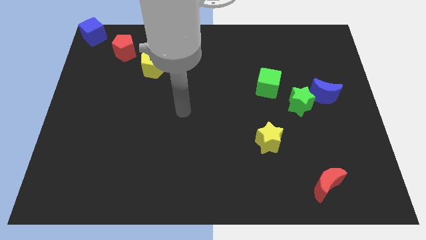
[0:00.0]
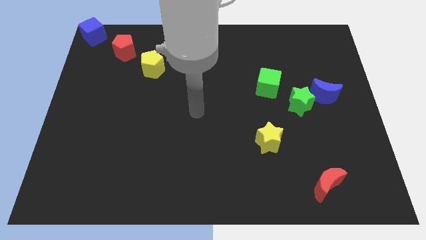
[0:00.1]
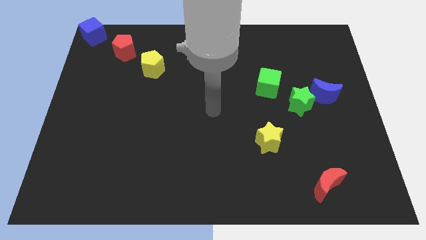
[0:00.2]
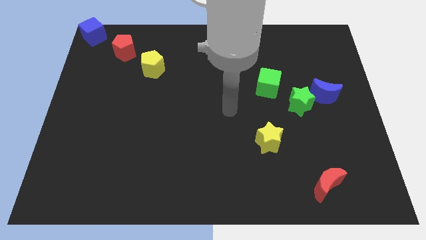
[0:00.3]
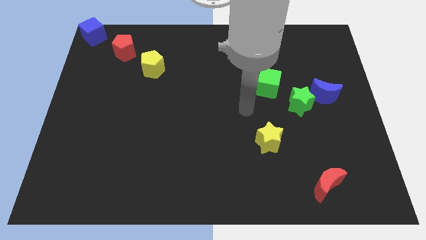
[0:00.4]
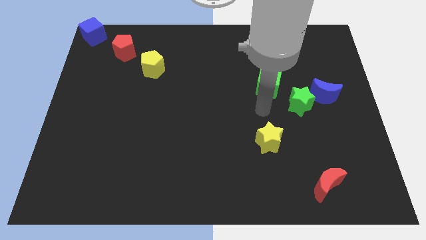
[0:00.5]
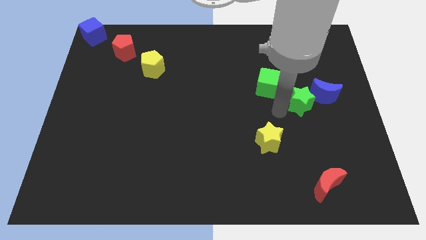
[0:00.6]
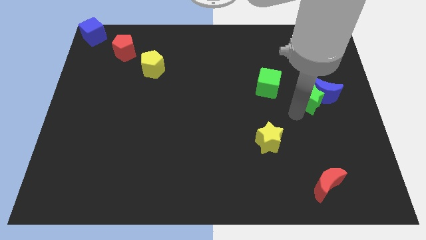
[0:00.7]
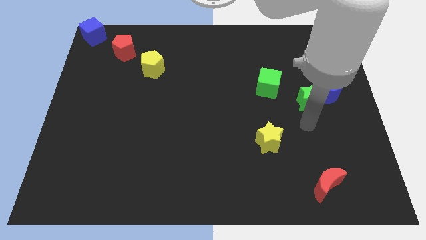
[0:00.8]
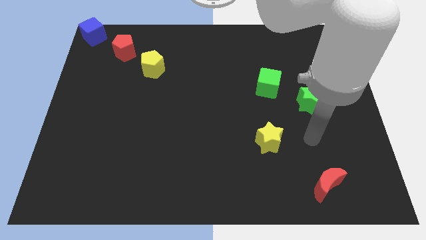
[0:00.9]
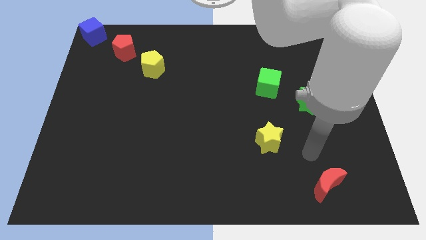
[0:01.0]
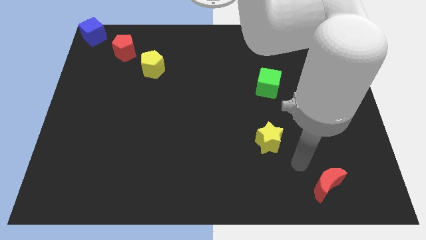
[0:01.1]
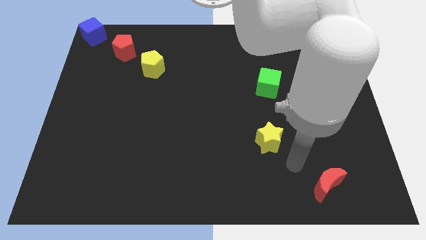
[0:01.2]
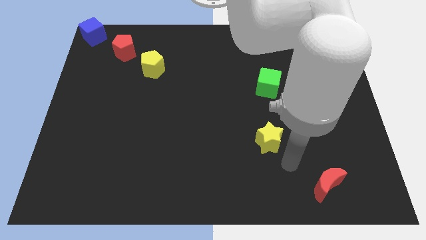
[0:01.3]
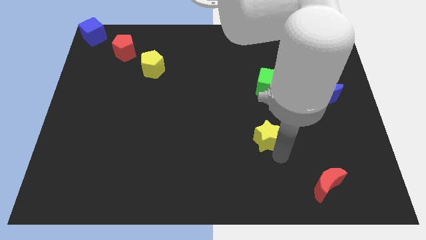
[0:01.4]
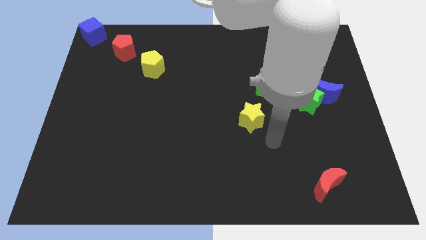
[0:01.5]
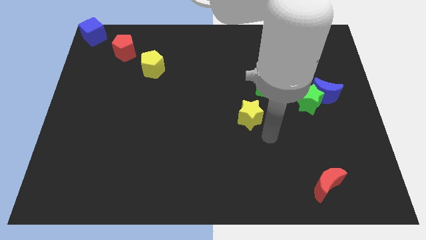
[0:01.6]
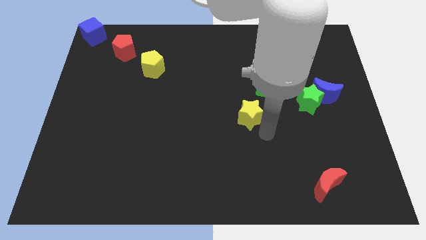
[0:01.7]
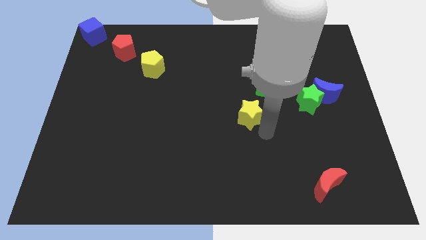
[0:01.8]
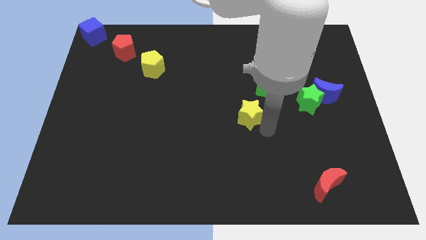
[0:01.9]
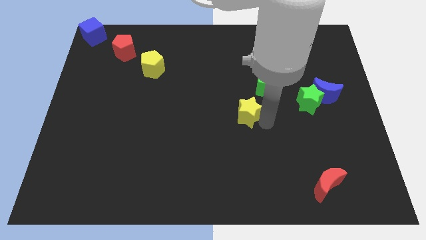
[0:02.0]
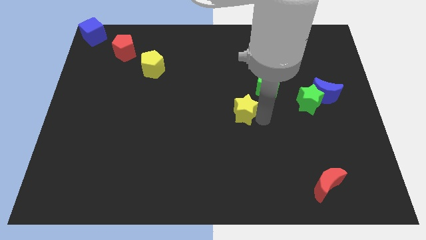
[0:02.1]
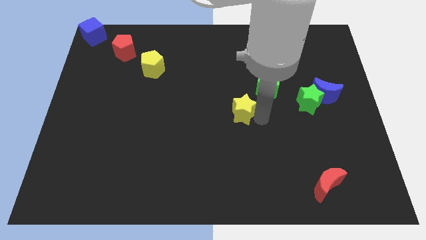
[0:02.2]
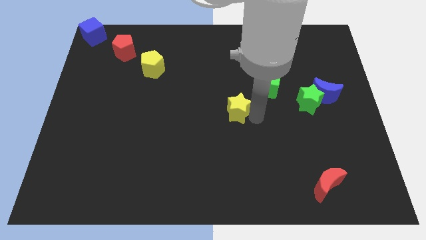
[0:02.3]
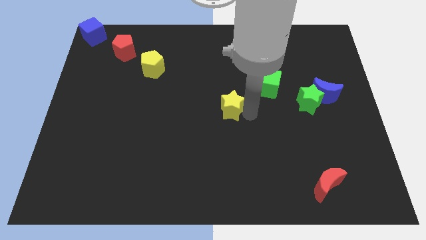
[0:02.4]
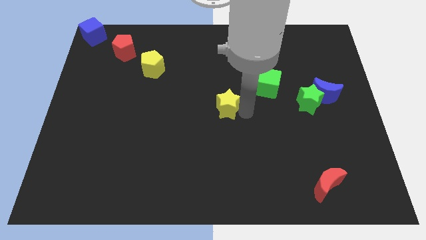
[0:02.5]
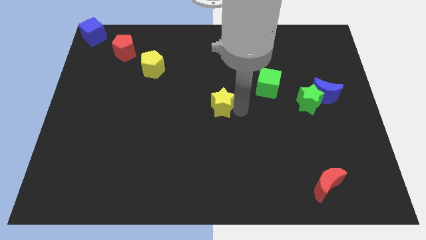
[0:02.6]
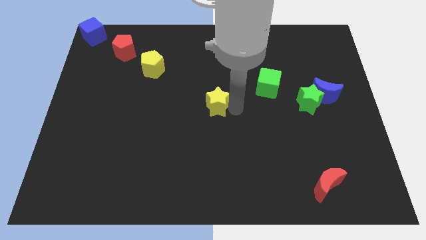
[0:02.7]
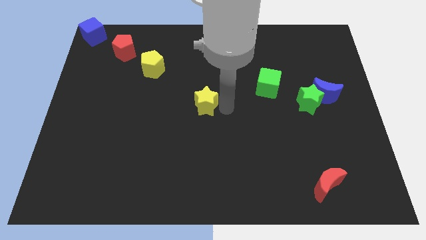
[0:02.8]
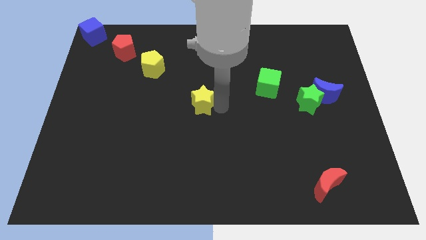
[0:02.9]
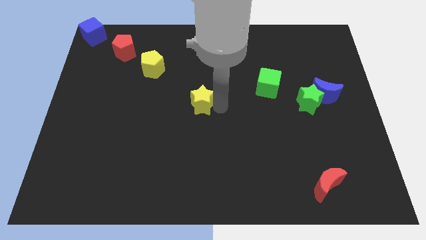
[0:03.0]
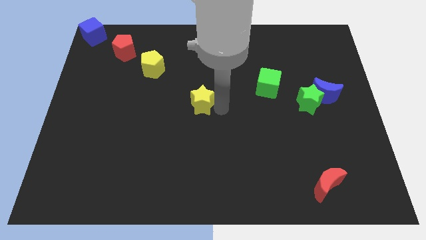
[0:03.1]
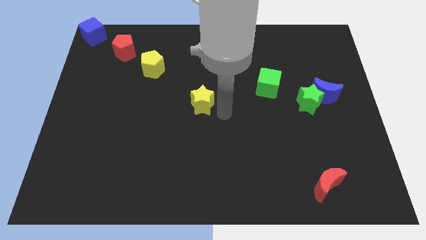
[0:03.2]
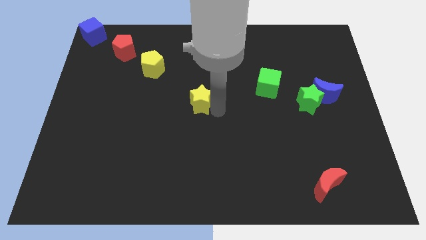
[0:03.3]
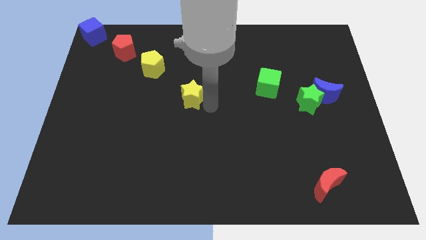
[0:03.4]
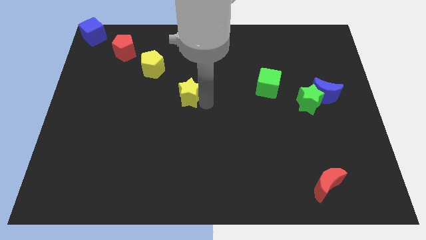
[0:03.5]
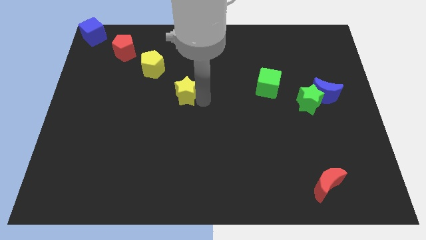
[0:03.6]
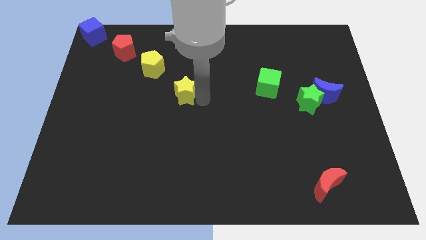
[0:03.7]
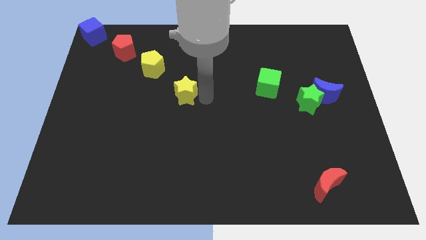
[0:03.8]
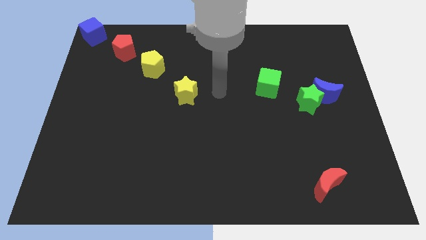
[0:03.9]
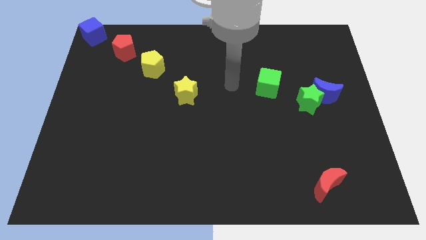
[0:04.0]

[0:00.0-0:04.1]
place the yellow star to the bottom right of the yellow pentagon

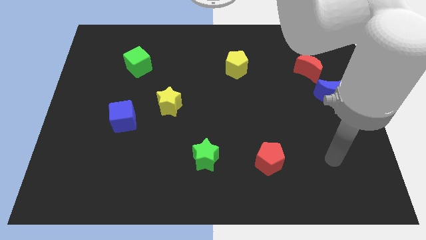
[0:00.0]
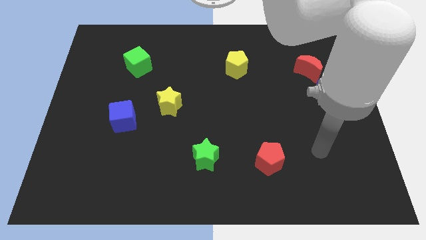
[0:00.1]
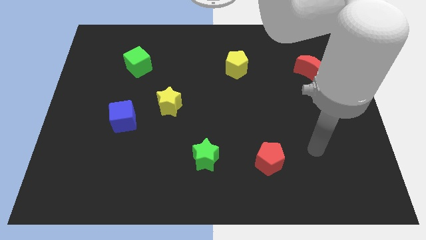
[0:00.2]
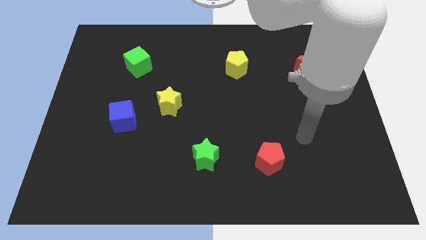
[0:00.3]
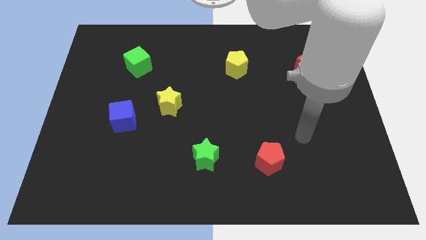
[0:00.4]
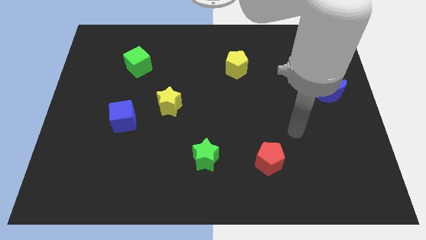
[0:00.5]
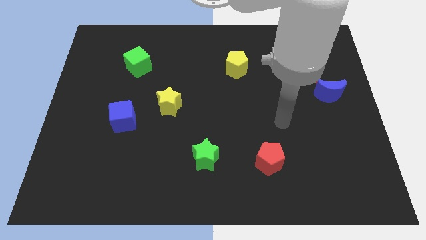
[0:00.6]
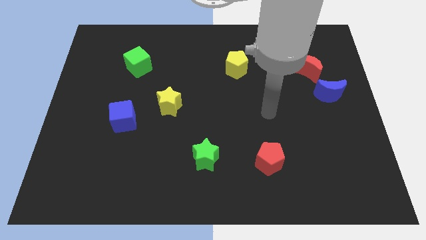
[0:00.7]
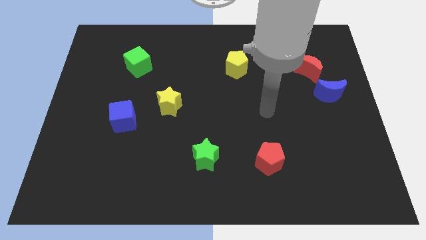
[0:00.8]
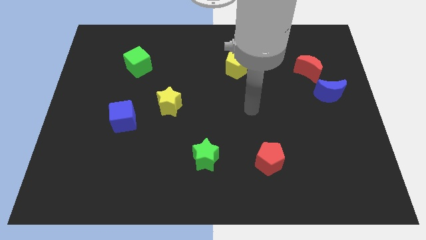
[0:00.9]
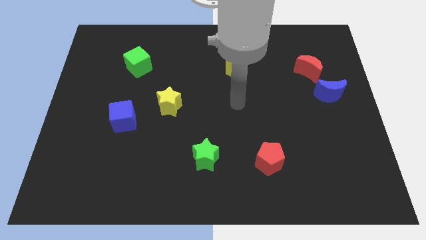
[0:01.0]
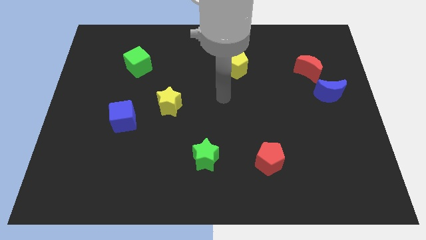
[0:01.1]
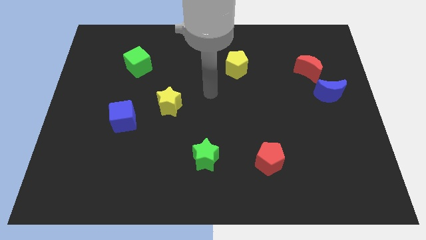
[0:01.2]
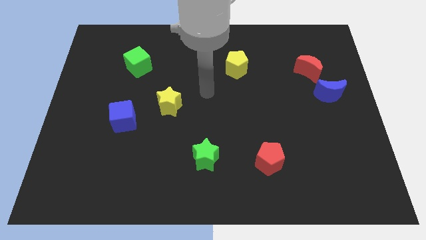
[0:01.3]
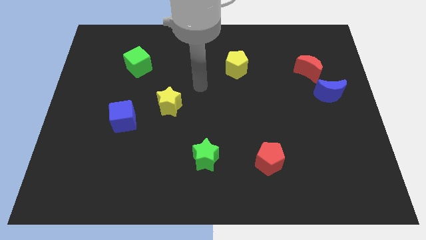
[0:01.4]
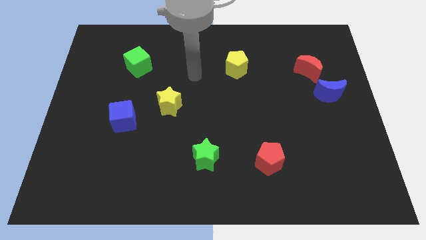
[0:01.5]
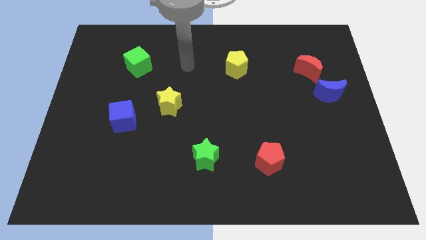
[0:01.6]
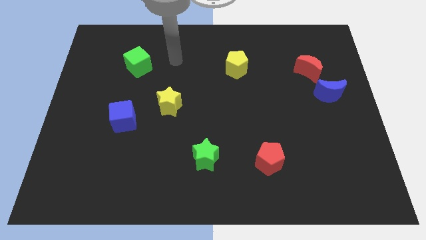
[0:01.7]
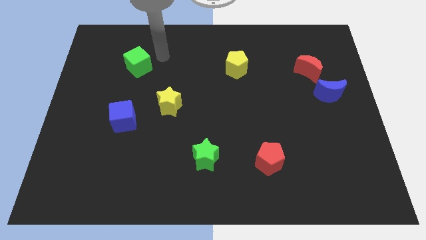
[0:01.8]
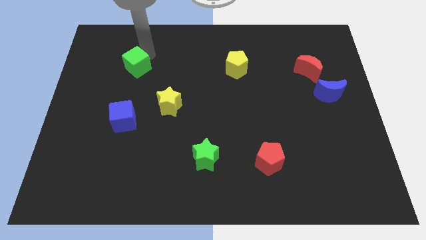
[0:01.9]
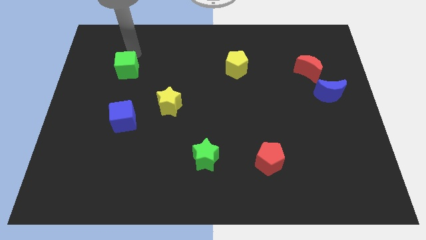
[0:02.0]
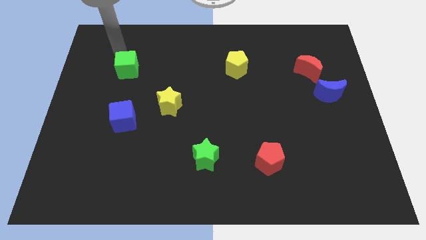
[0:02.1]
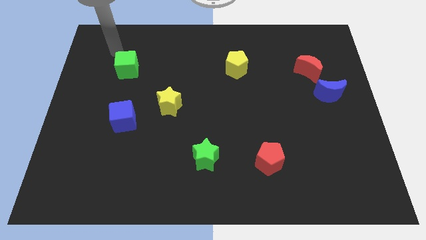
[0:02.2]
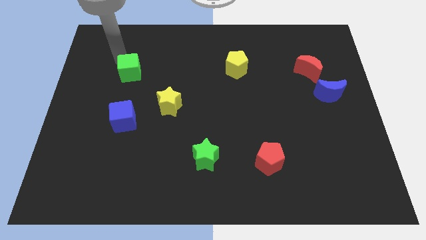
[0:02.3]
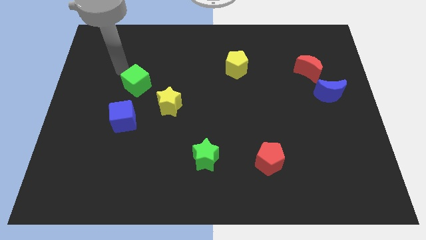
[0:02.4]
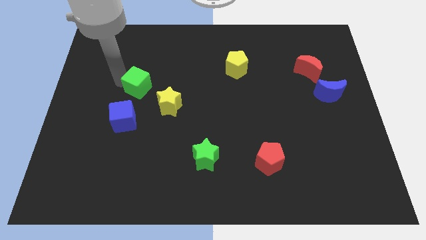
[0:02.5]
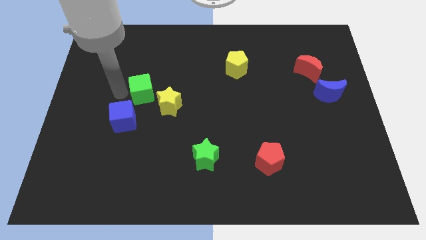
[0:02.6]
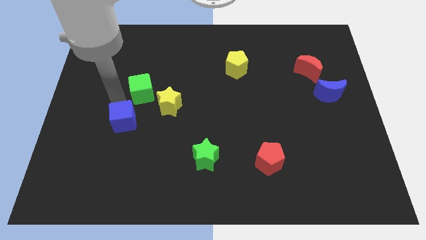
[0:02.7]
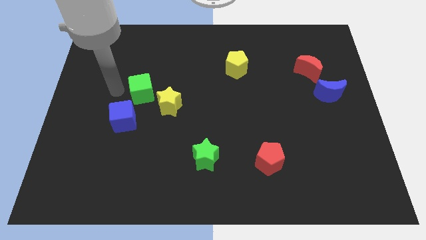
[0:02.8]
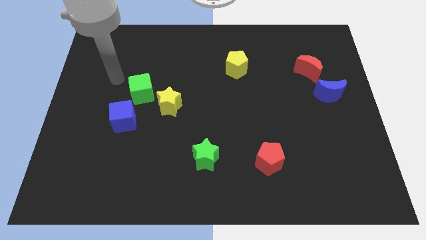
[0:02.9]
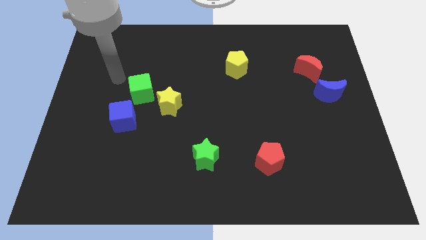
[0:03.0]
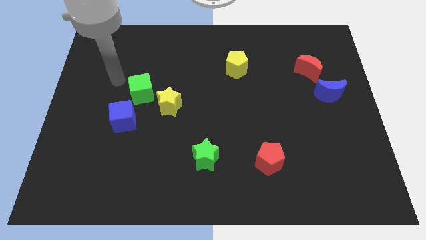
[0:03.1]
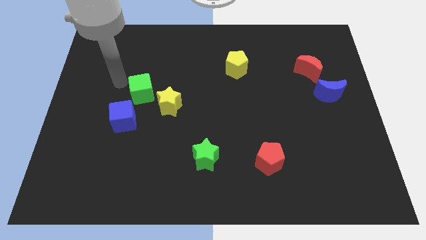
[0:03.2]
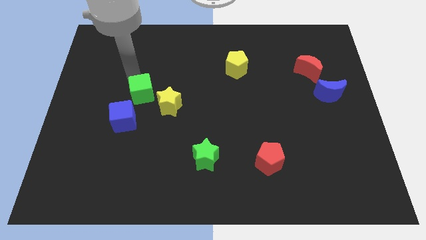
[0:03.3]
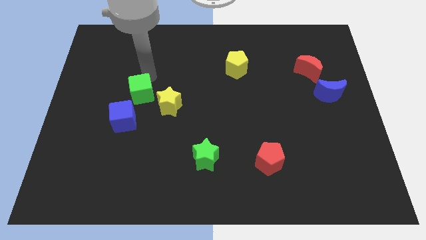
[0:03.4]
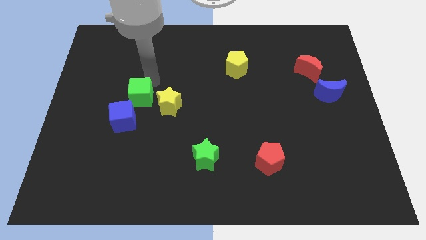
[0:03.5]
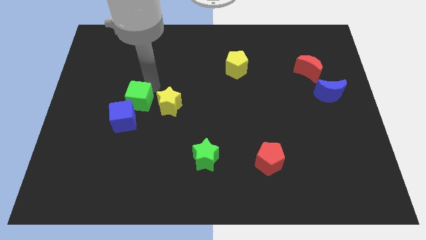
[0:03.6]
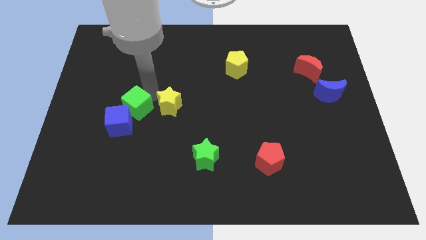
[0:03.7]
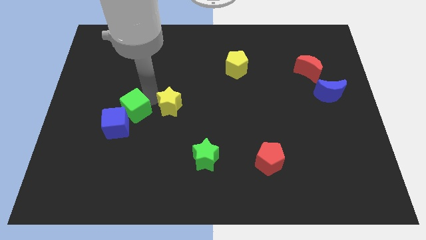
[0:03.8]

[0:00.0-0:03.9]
push the green cube in between the blue cube and yellow star

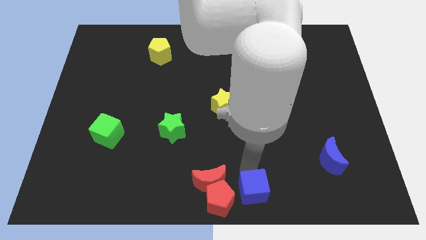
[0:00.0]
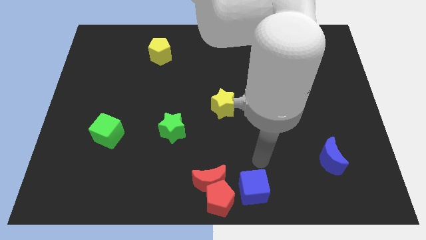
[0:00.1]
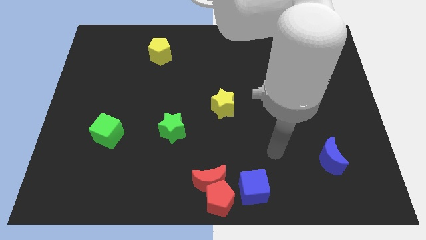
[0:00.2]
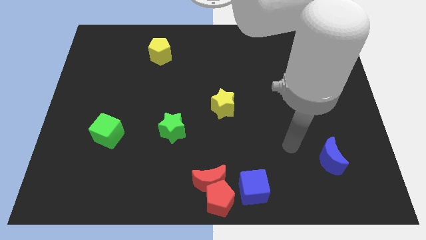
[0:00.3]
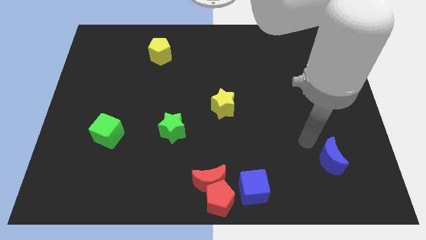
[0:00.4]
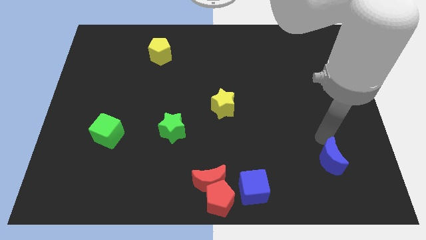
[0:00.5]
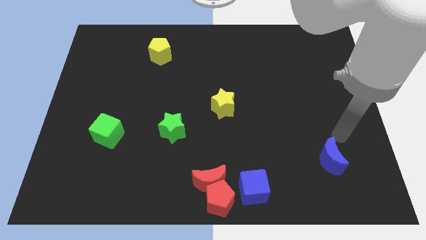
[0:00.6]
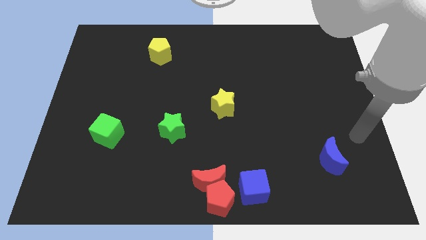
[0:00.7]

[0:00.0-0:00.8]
go away from the blue cube

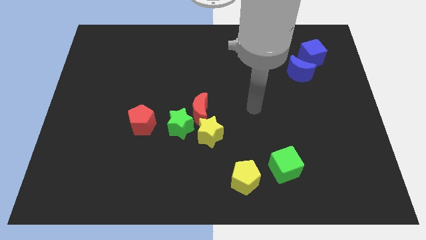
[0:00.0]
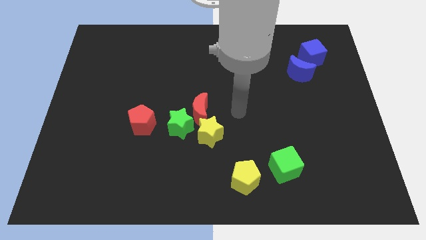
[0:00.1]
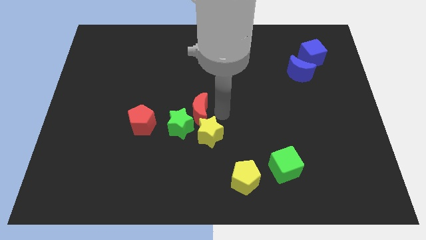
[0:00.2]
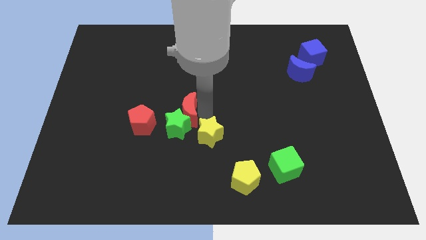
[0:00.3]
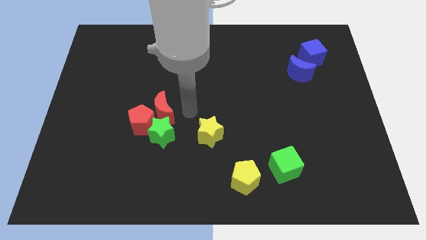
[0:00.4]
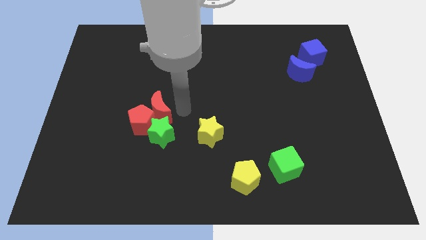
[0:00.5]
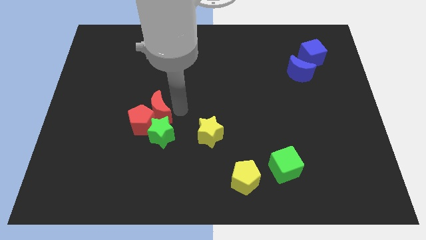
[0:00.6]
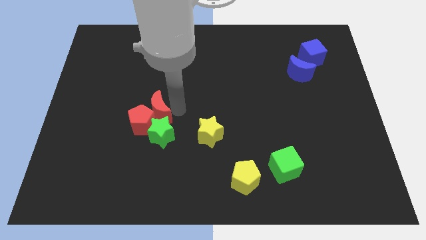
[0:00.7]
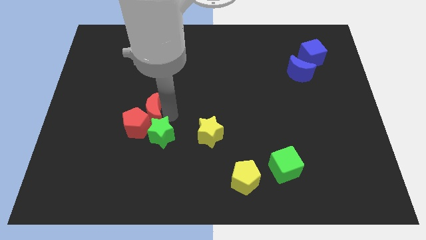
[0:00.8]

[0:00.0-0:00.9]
push red moon in to red pentagon
